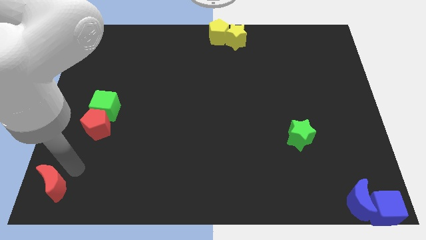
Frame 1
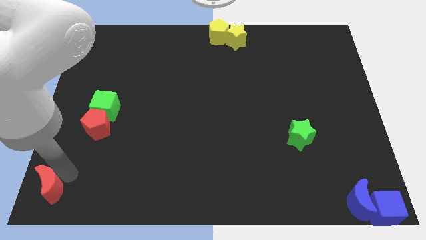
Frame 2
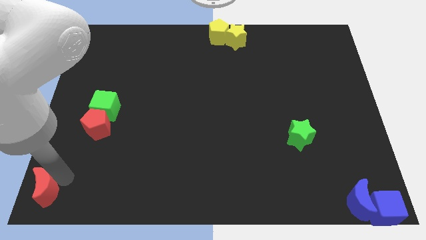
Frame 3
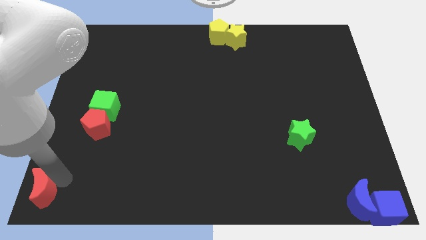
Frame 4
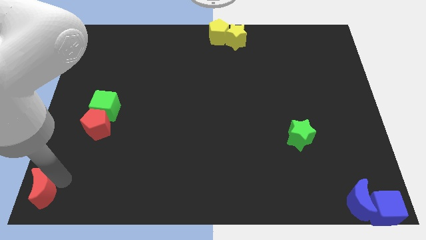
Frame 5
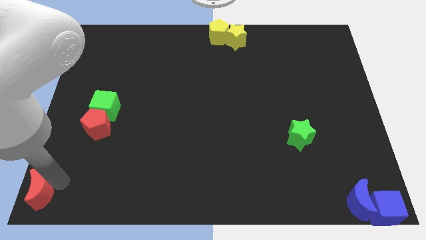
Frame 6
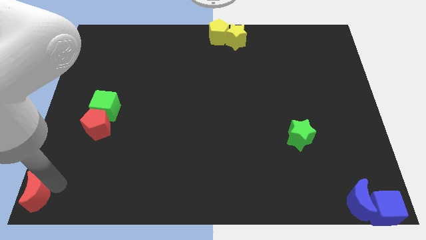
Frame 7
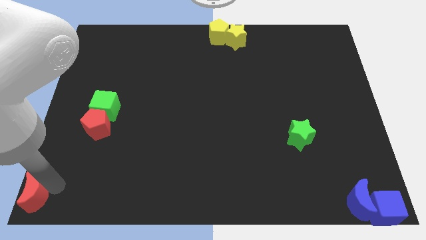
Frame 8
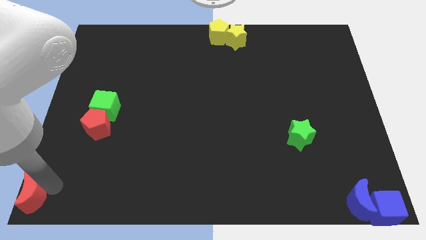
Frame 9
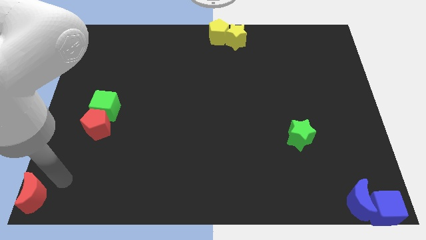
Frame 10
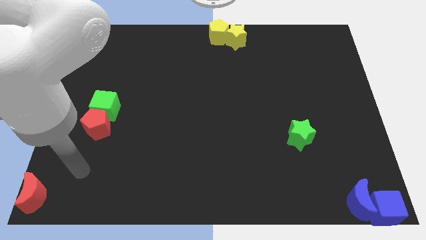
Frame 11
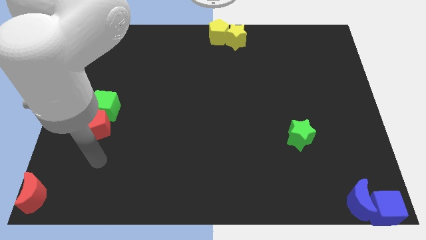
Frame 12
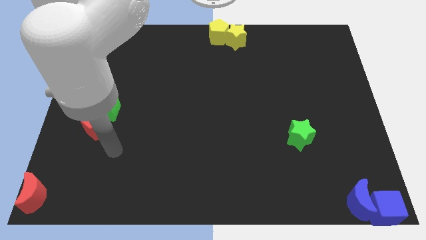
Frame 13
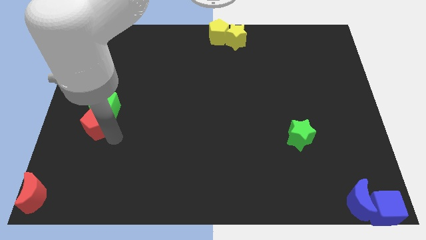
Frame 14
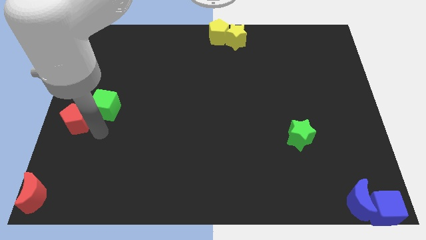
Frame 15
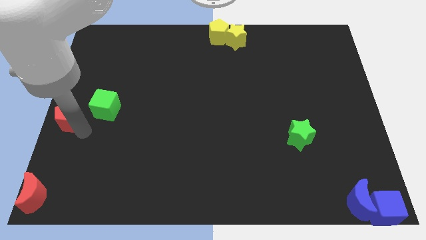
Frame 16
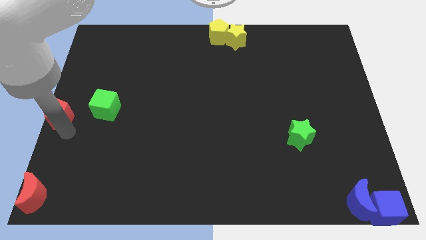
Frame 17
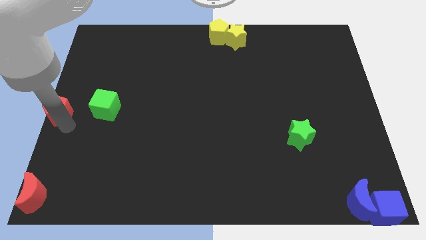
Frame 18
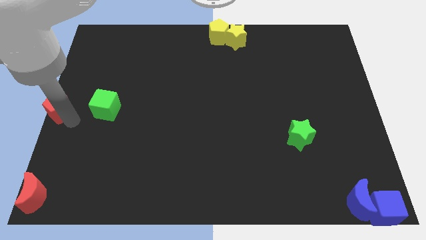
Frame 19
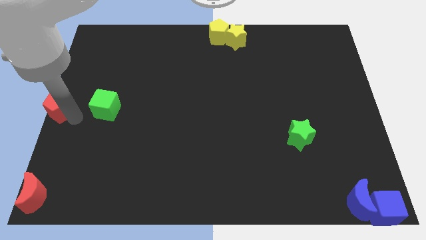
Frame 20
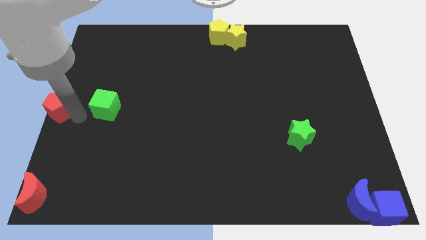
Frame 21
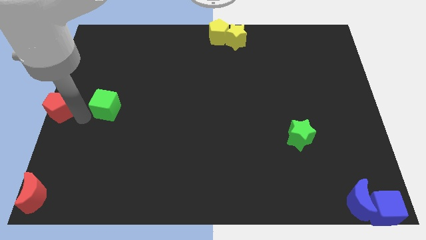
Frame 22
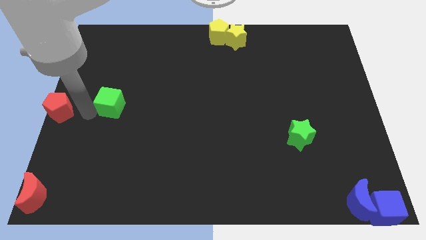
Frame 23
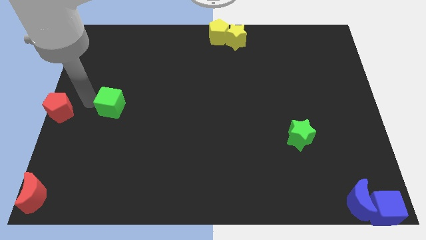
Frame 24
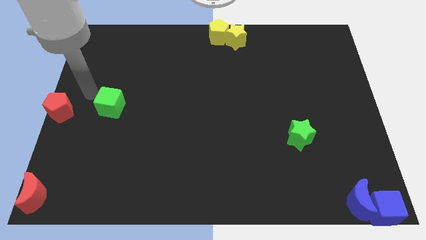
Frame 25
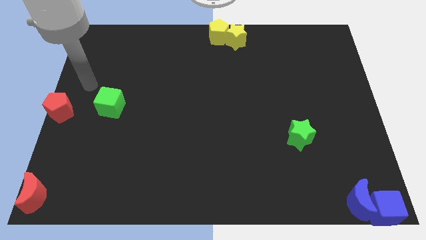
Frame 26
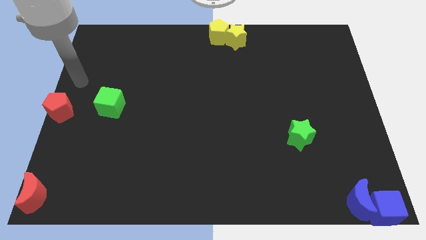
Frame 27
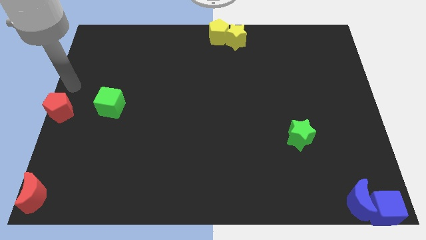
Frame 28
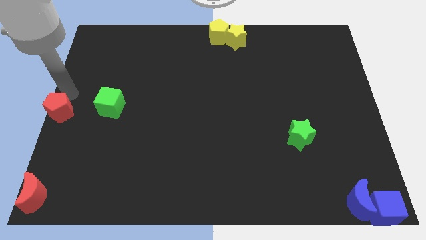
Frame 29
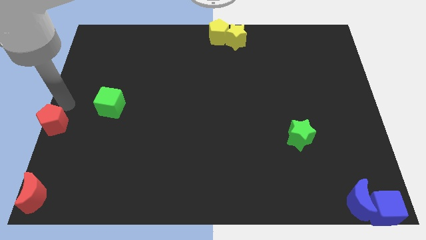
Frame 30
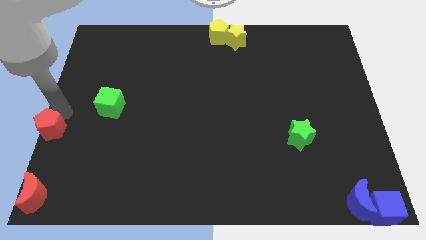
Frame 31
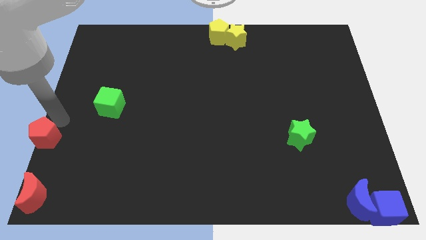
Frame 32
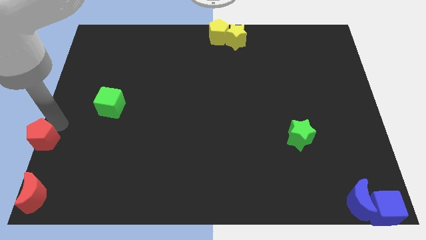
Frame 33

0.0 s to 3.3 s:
separate the red pentagon from the green star

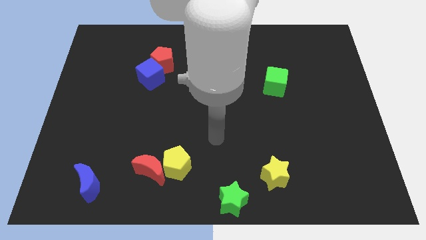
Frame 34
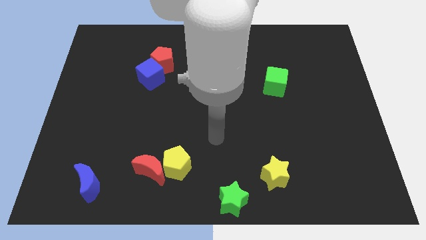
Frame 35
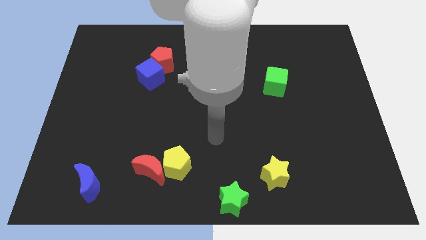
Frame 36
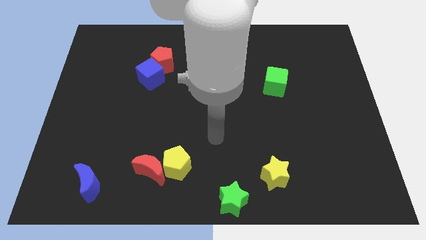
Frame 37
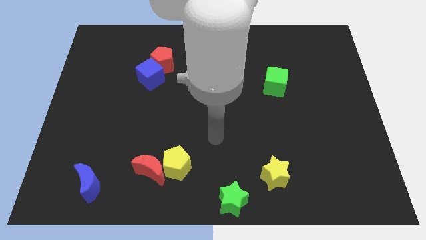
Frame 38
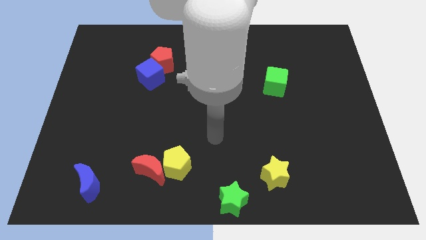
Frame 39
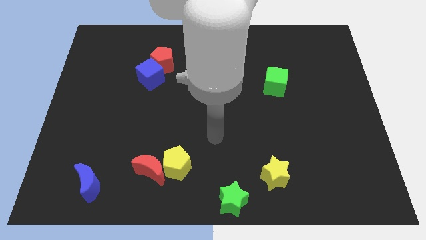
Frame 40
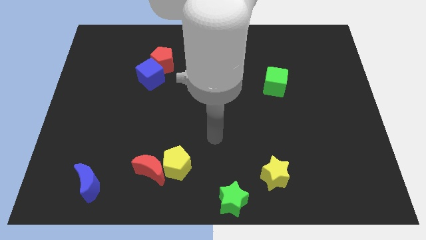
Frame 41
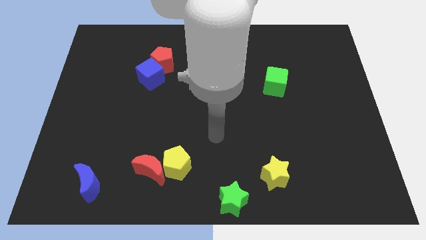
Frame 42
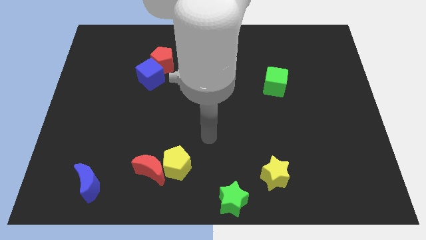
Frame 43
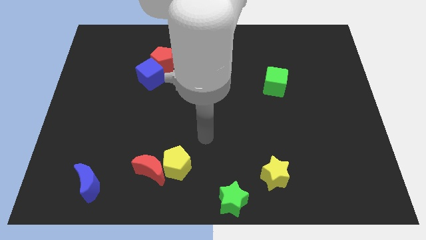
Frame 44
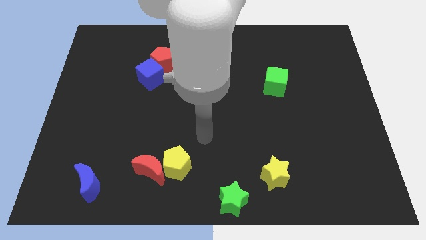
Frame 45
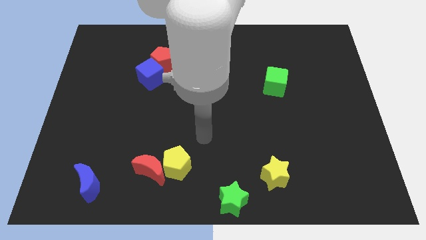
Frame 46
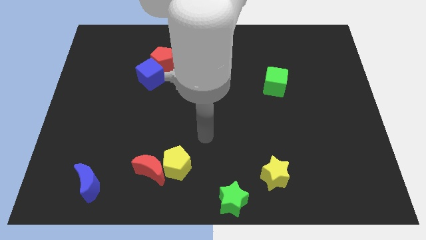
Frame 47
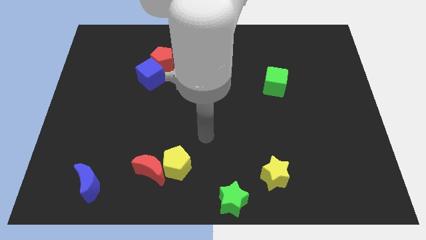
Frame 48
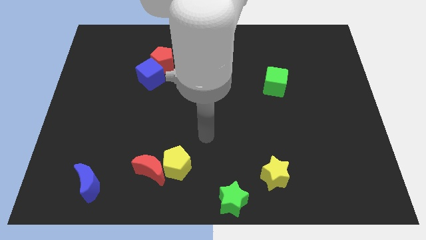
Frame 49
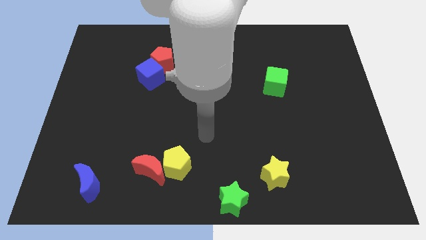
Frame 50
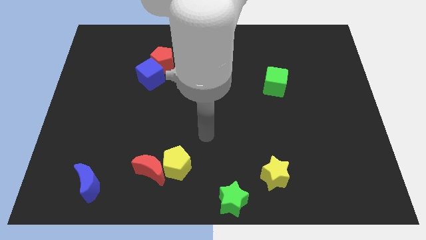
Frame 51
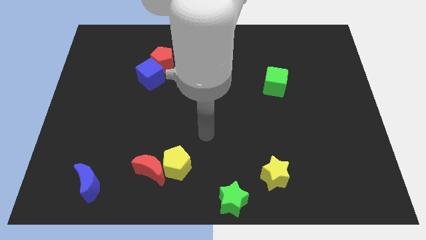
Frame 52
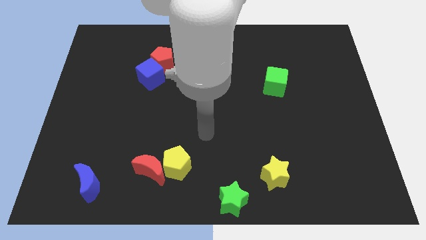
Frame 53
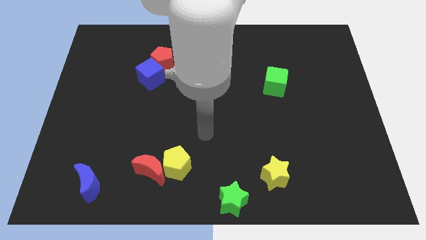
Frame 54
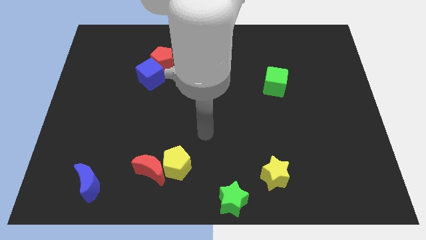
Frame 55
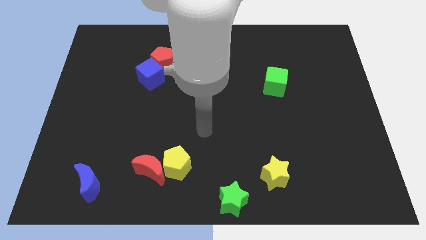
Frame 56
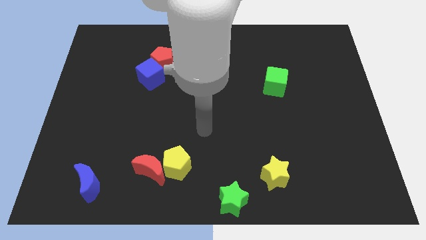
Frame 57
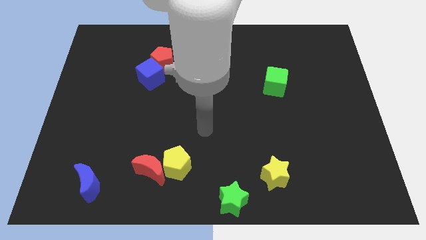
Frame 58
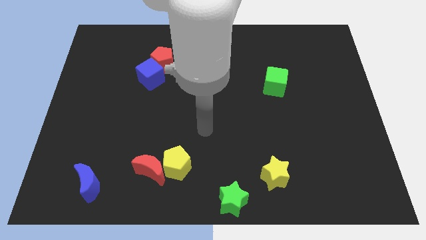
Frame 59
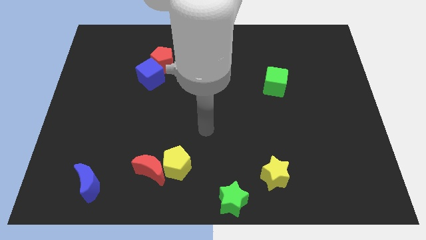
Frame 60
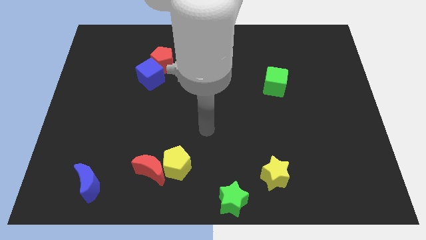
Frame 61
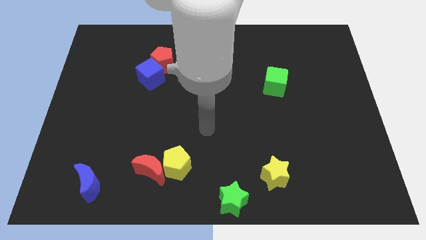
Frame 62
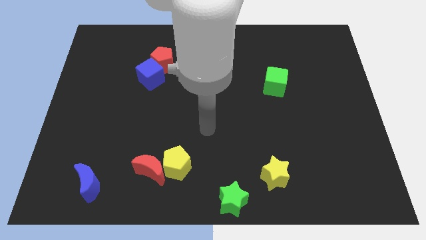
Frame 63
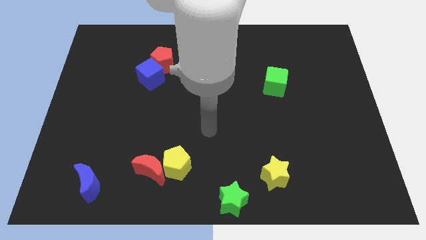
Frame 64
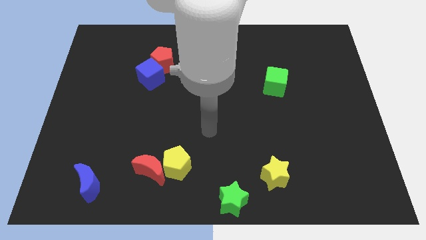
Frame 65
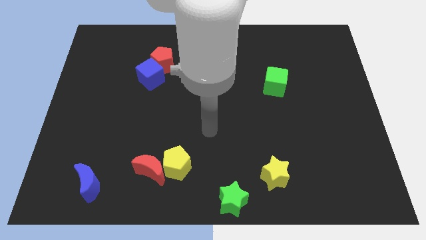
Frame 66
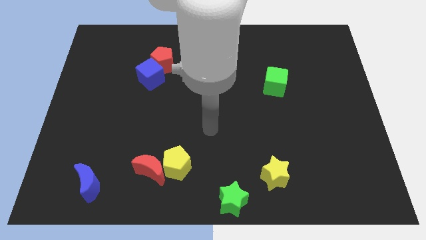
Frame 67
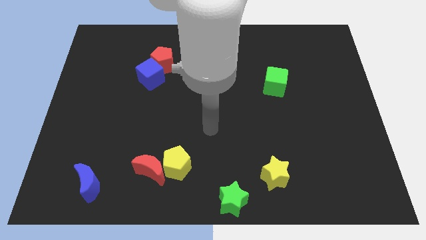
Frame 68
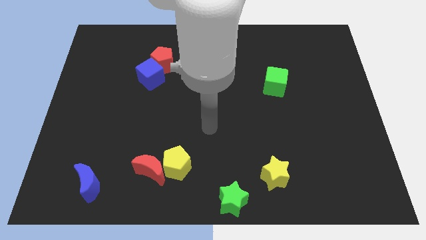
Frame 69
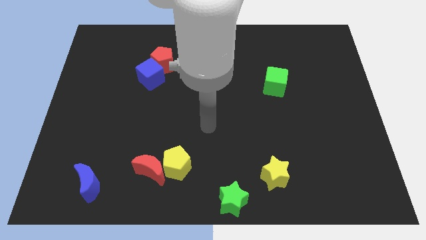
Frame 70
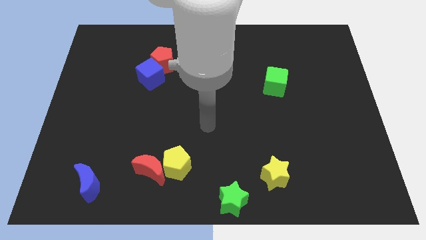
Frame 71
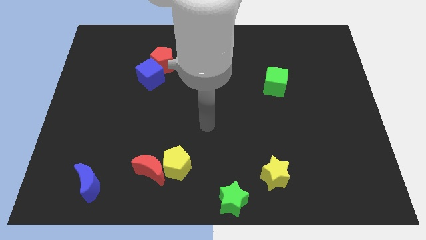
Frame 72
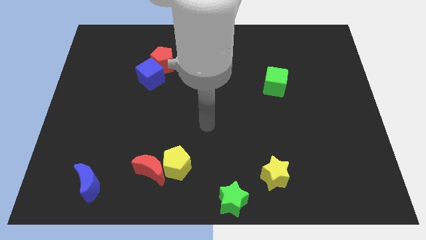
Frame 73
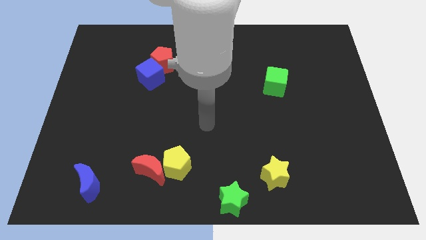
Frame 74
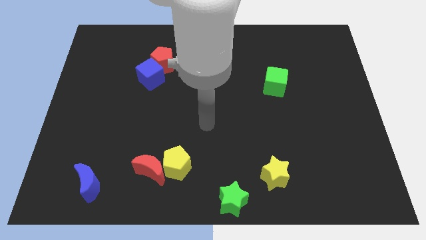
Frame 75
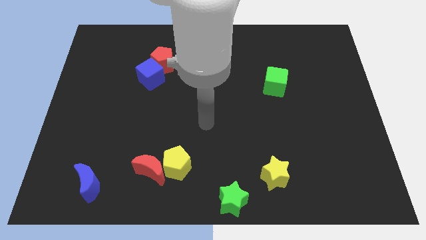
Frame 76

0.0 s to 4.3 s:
place arm in between yellow pentagon and green cube

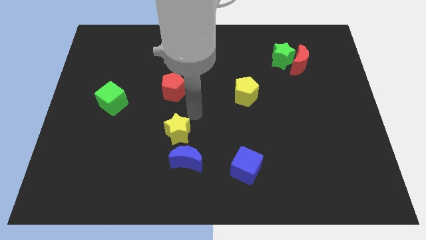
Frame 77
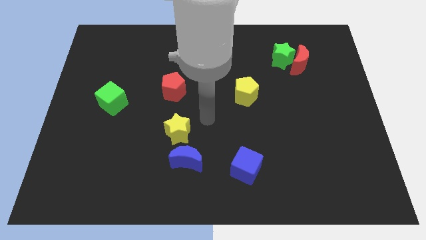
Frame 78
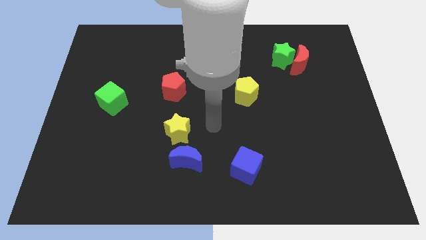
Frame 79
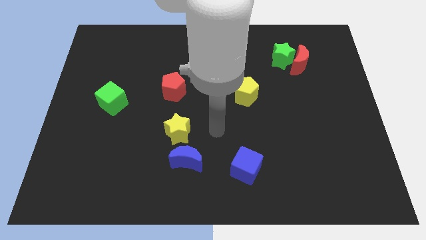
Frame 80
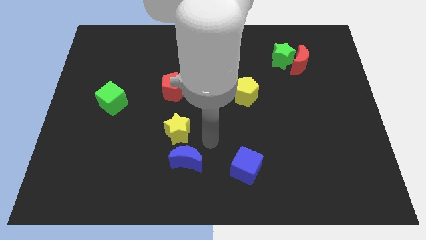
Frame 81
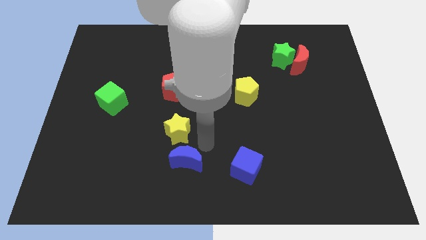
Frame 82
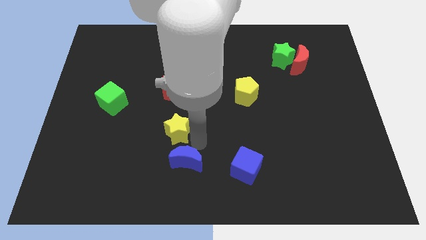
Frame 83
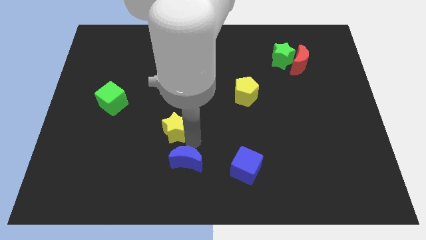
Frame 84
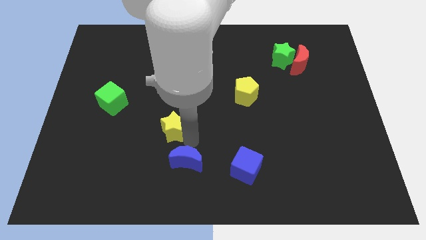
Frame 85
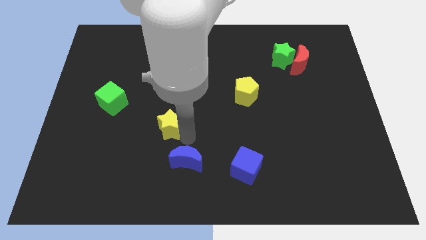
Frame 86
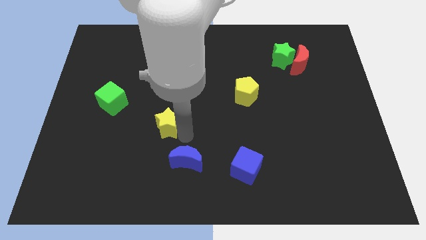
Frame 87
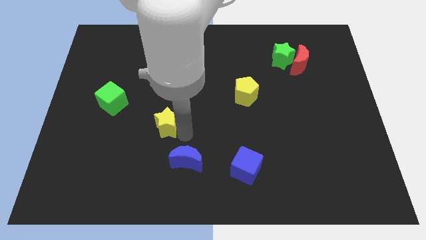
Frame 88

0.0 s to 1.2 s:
move yellow star slightly to the right
